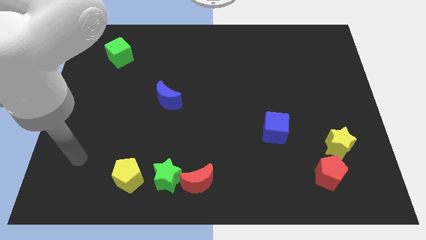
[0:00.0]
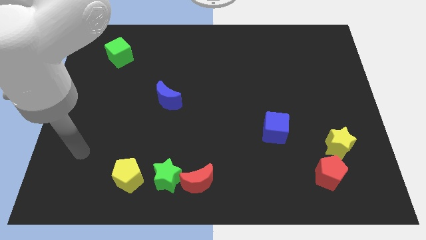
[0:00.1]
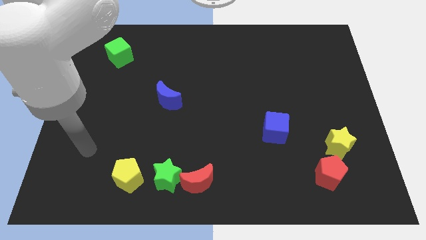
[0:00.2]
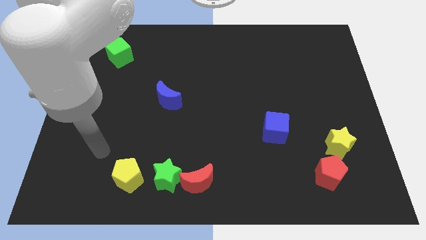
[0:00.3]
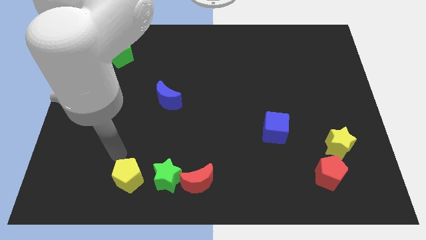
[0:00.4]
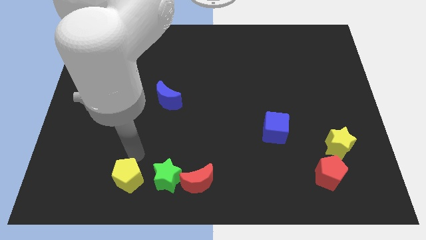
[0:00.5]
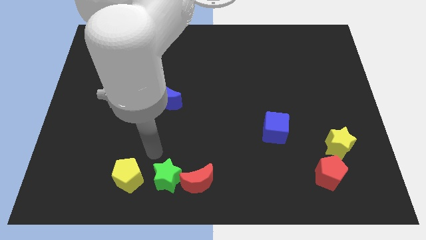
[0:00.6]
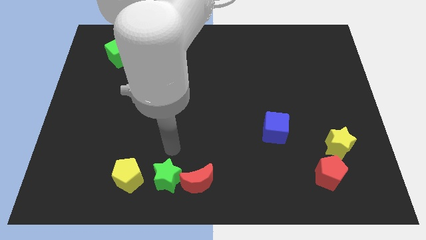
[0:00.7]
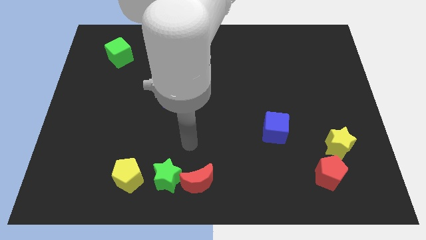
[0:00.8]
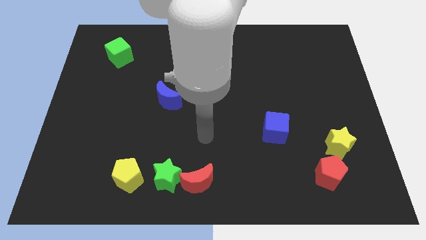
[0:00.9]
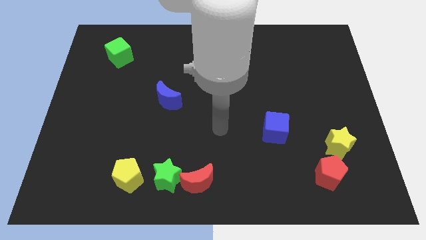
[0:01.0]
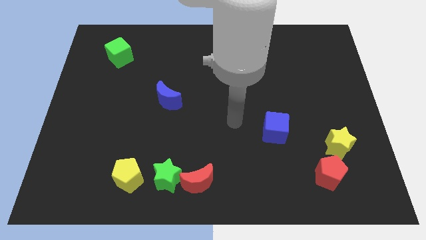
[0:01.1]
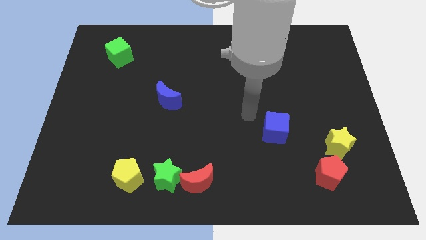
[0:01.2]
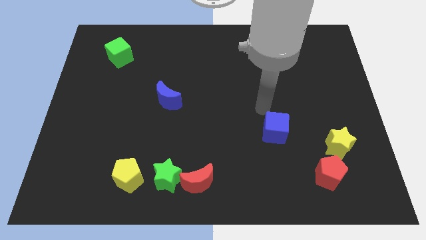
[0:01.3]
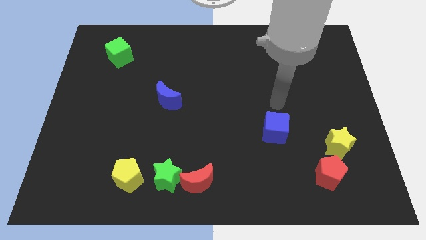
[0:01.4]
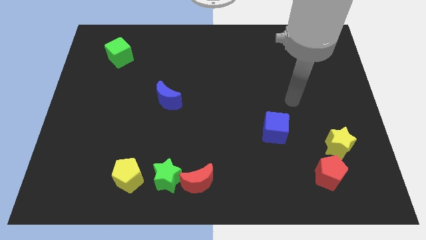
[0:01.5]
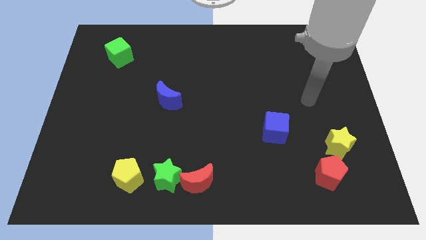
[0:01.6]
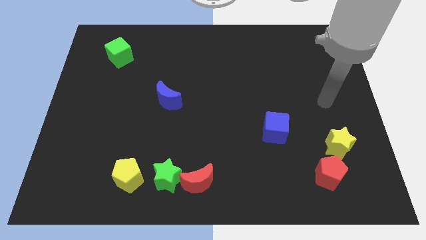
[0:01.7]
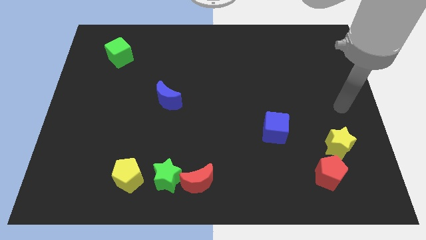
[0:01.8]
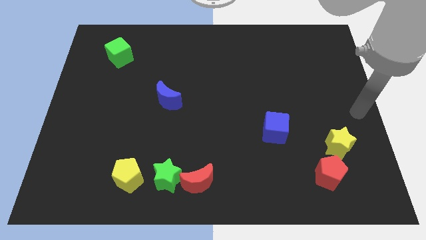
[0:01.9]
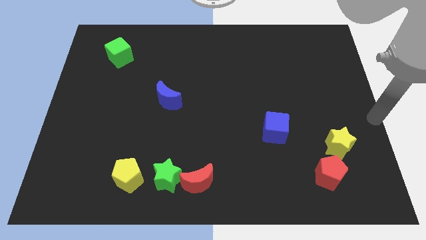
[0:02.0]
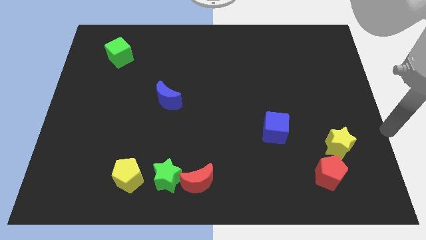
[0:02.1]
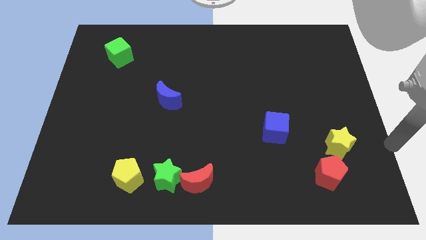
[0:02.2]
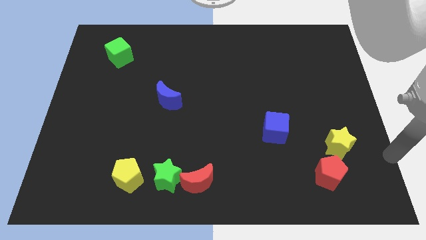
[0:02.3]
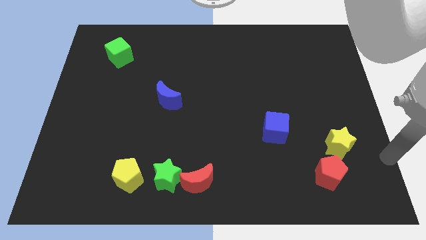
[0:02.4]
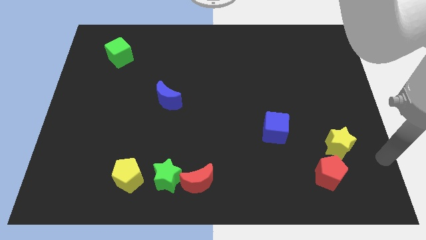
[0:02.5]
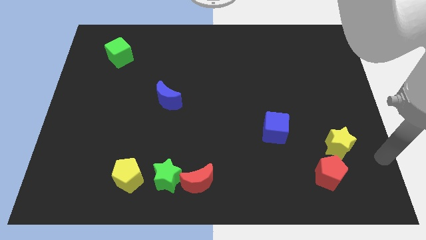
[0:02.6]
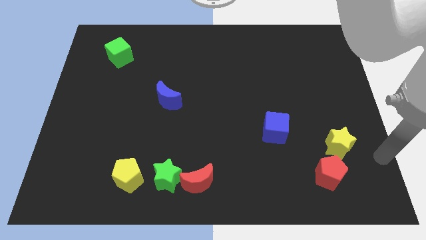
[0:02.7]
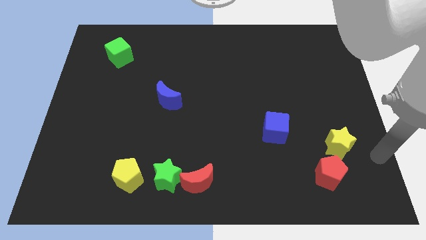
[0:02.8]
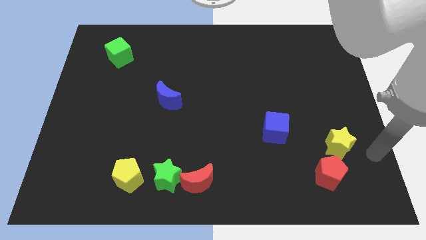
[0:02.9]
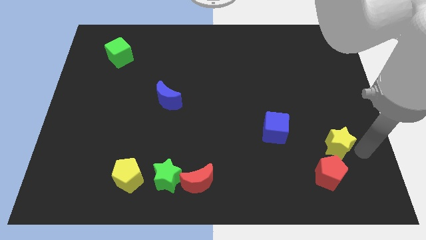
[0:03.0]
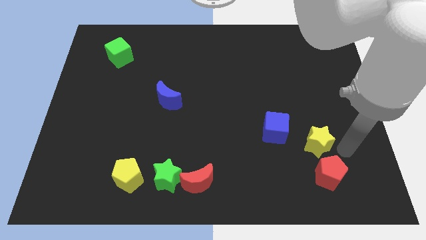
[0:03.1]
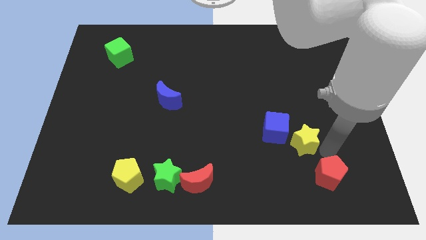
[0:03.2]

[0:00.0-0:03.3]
move the yellow star diagonal to the red pentagon

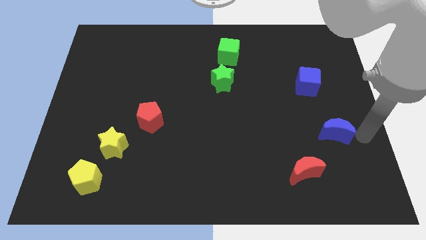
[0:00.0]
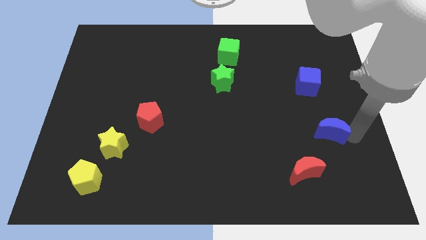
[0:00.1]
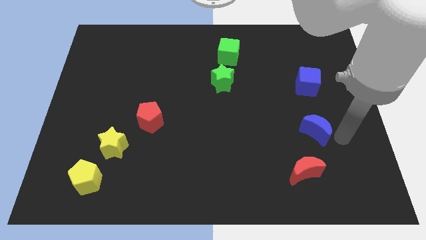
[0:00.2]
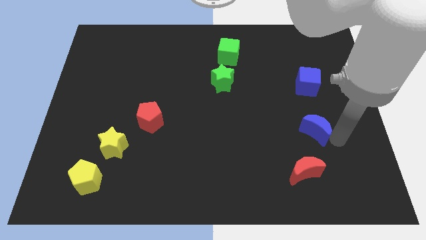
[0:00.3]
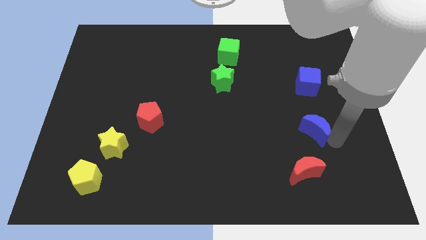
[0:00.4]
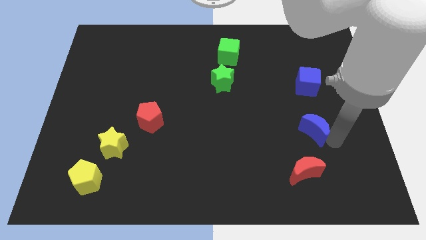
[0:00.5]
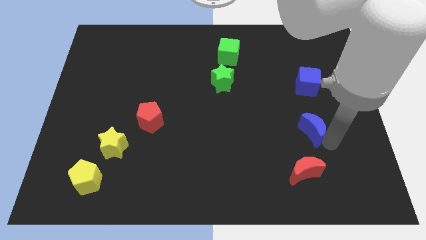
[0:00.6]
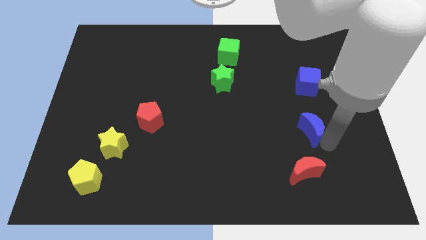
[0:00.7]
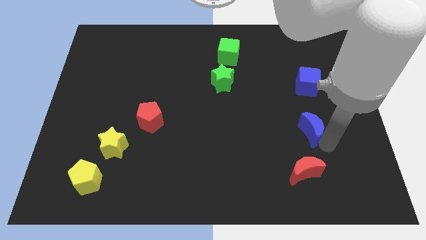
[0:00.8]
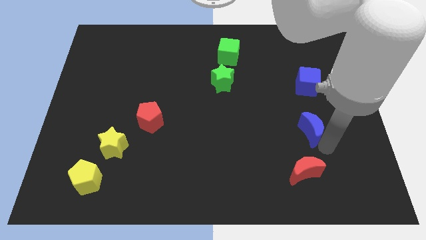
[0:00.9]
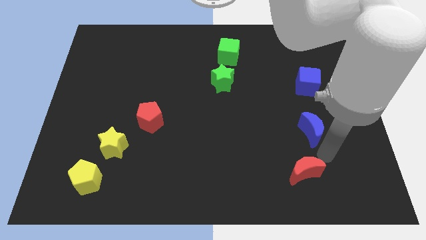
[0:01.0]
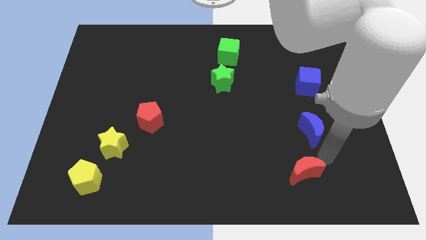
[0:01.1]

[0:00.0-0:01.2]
place the blue crescent in between the blue cube and the red crescent

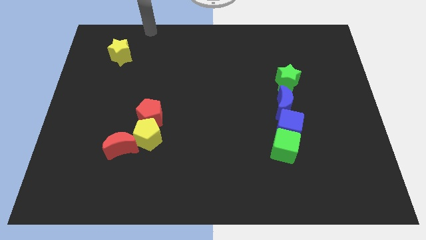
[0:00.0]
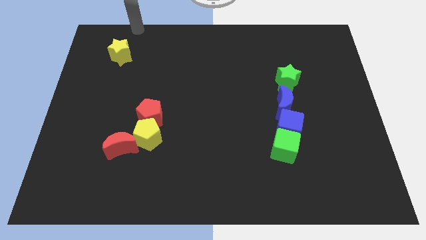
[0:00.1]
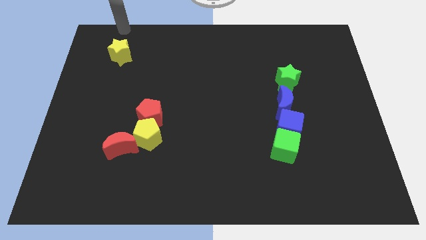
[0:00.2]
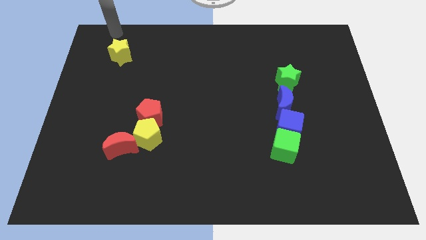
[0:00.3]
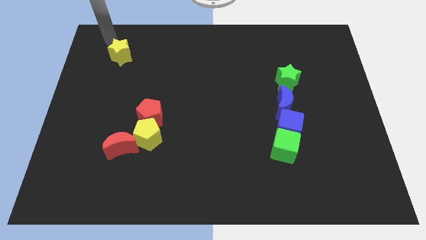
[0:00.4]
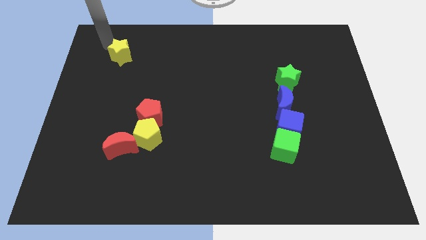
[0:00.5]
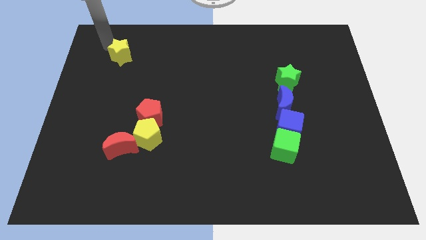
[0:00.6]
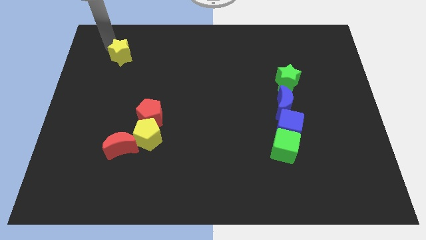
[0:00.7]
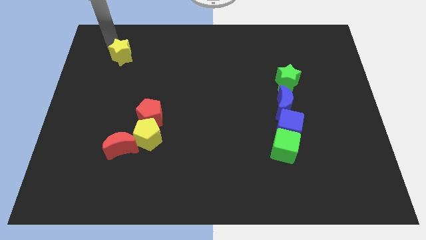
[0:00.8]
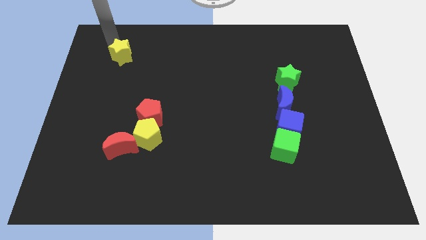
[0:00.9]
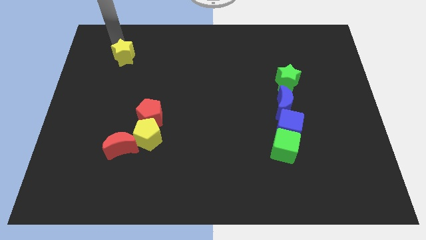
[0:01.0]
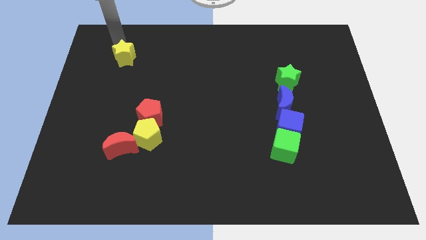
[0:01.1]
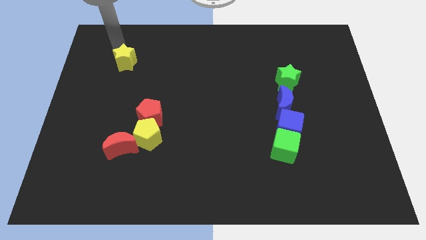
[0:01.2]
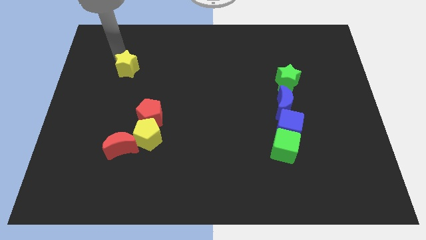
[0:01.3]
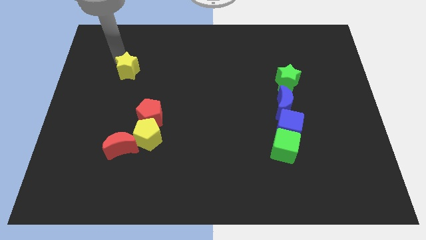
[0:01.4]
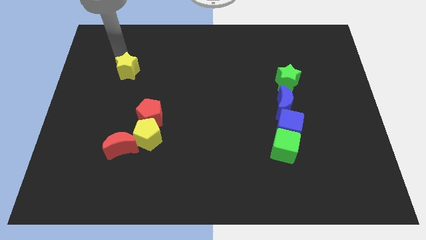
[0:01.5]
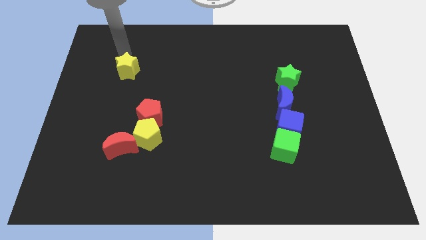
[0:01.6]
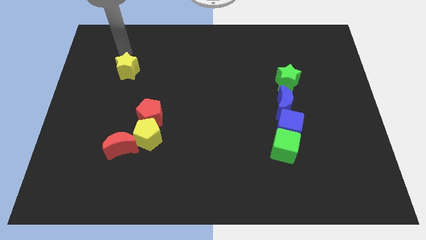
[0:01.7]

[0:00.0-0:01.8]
slightly move the yellow star towards the red pentagon

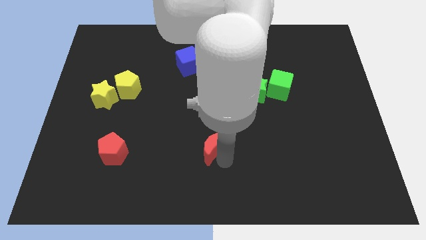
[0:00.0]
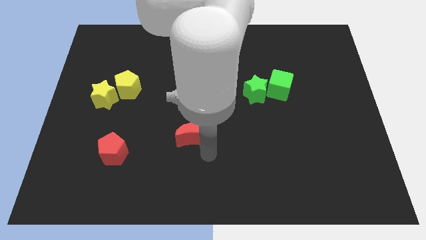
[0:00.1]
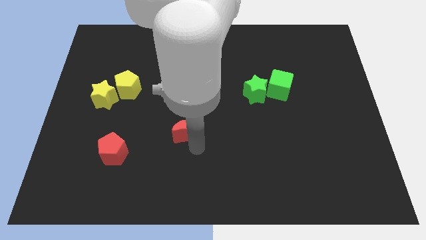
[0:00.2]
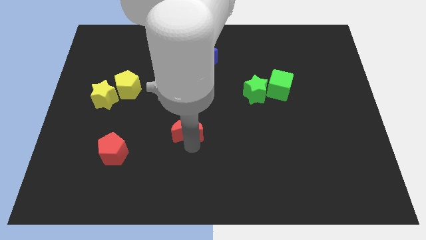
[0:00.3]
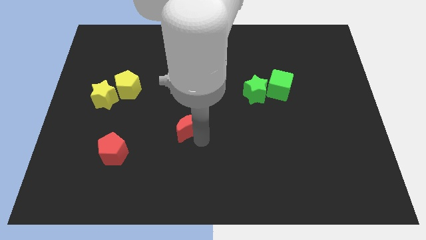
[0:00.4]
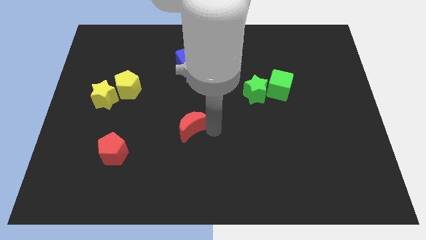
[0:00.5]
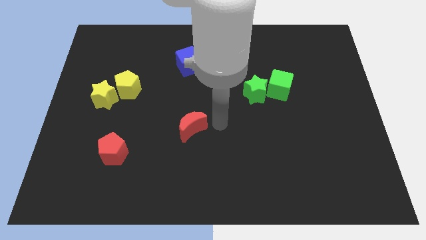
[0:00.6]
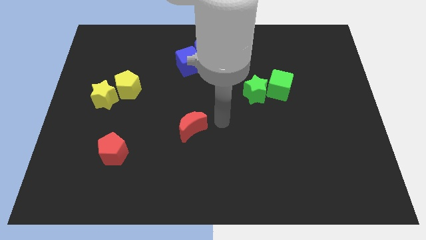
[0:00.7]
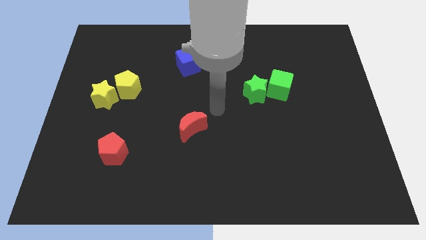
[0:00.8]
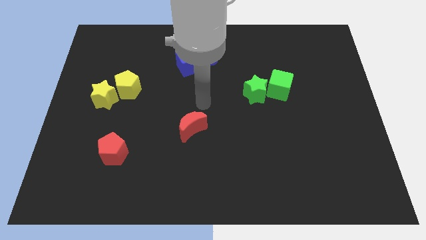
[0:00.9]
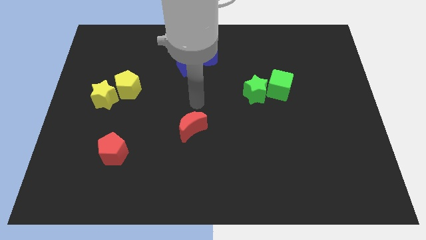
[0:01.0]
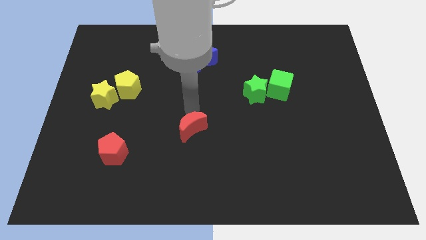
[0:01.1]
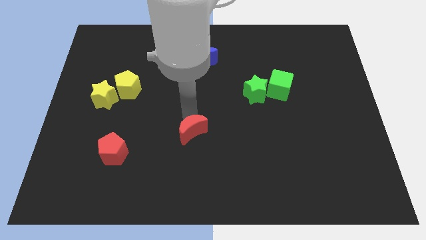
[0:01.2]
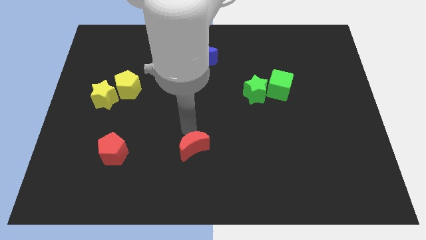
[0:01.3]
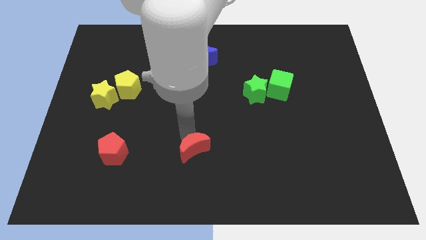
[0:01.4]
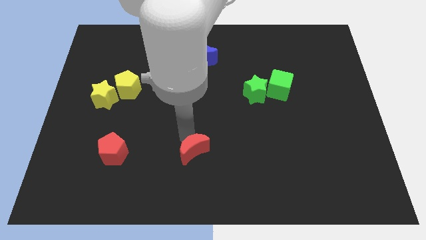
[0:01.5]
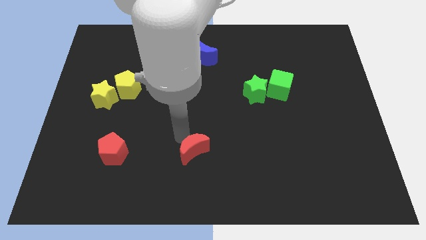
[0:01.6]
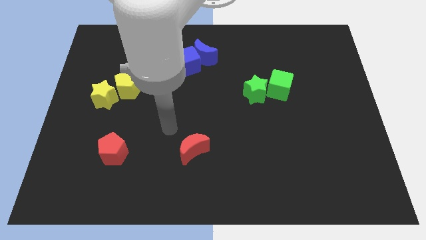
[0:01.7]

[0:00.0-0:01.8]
push the red crescent vertically on the bottom side of the blue cube

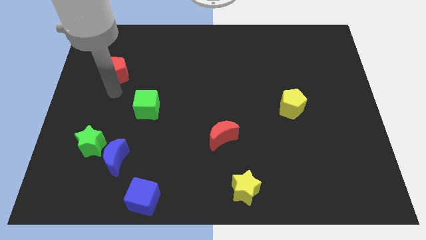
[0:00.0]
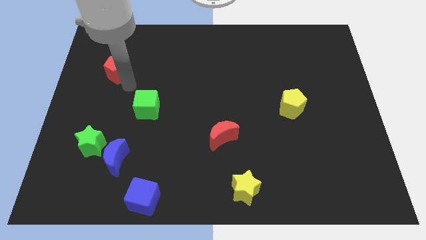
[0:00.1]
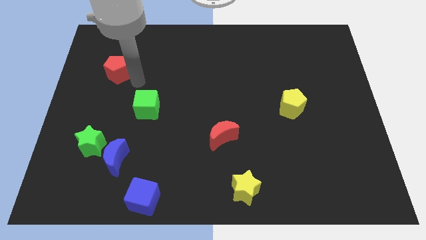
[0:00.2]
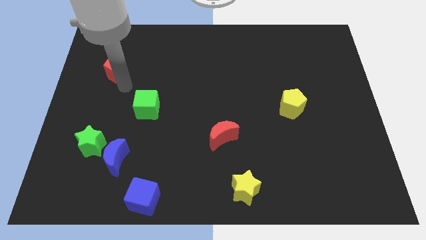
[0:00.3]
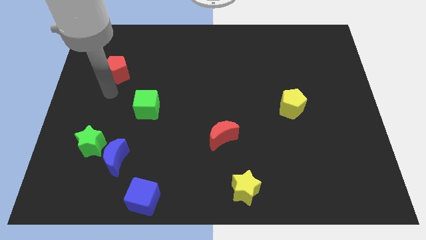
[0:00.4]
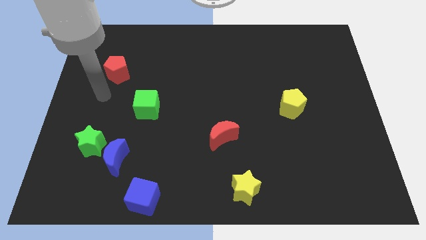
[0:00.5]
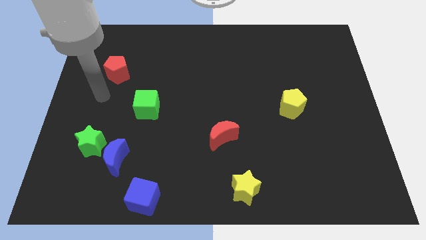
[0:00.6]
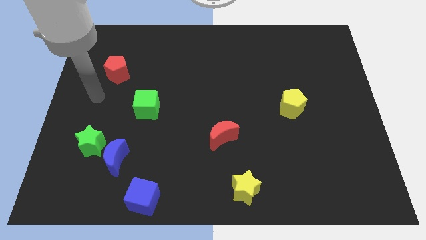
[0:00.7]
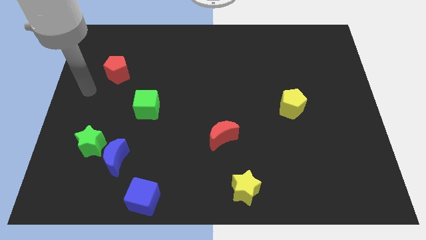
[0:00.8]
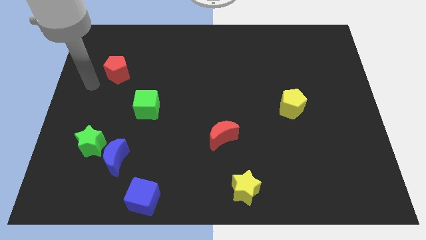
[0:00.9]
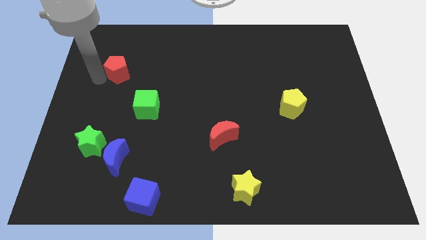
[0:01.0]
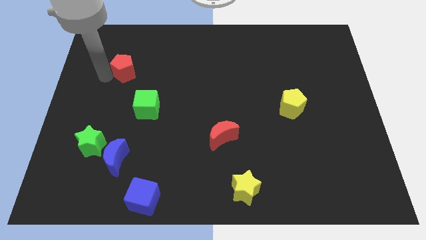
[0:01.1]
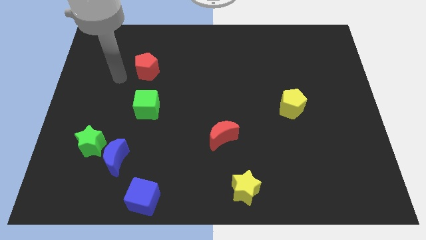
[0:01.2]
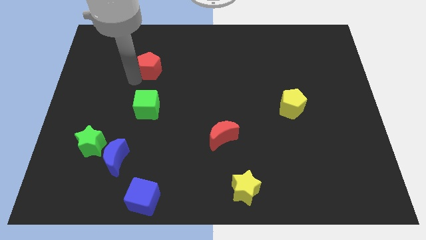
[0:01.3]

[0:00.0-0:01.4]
put the red pentagon at the top of green cube
